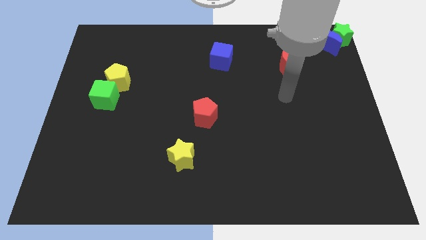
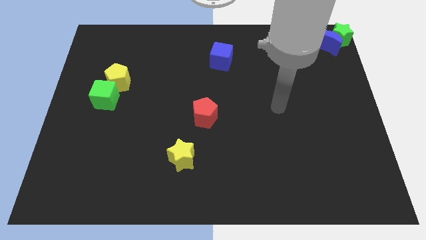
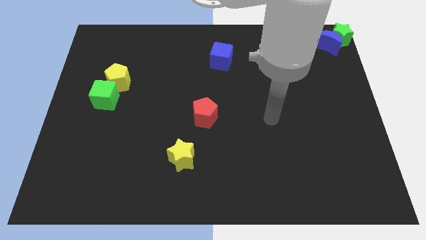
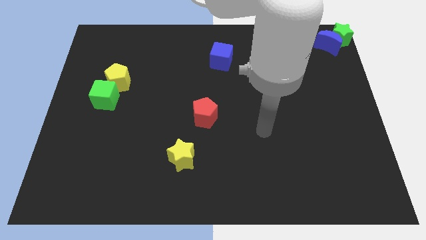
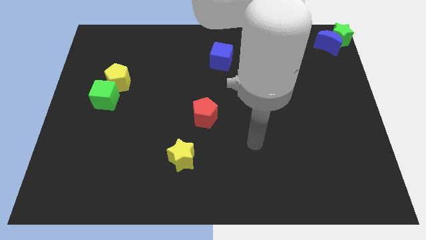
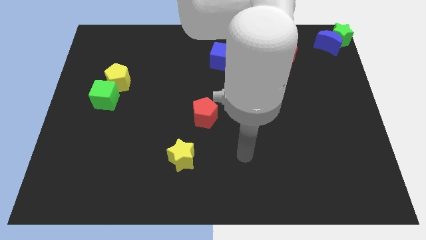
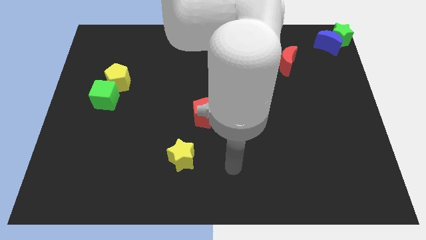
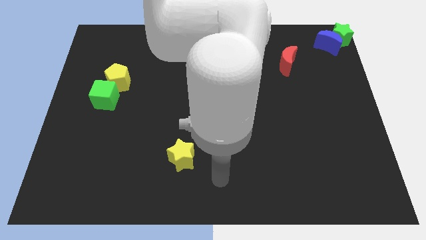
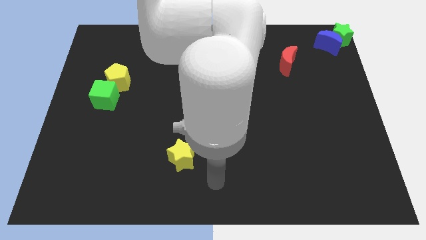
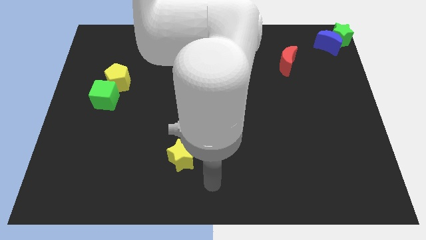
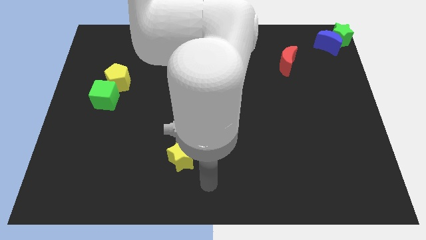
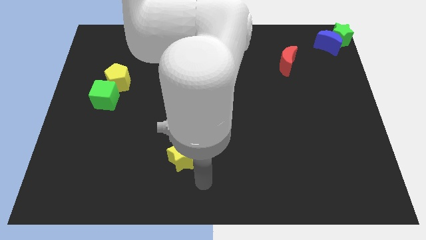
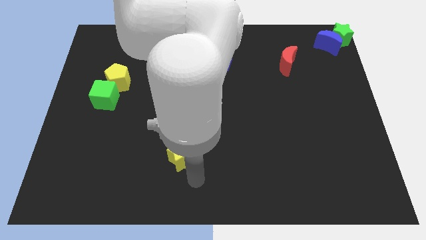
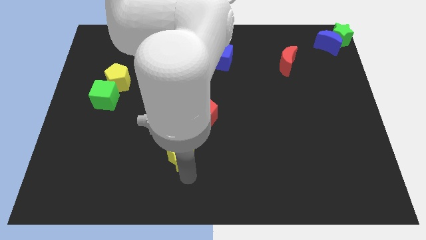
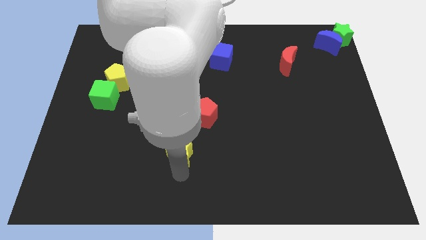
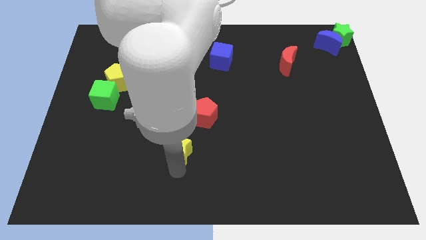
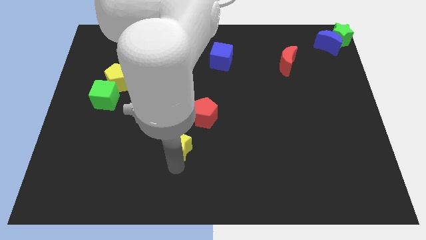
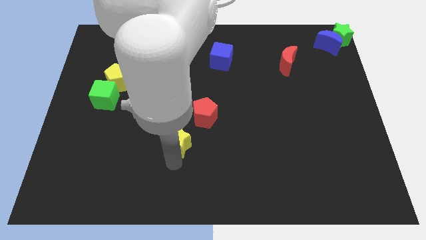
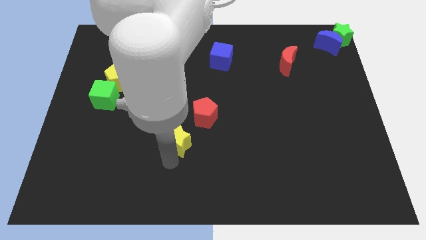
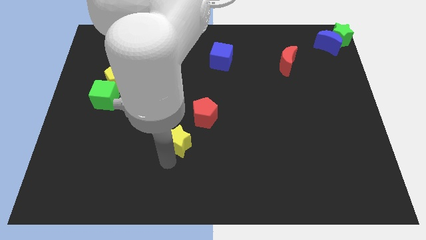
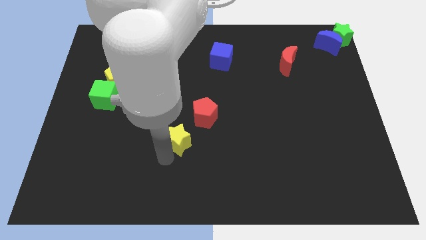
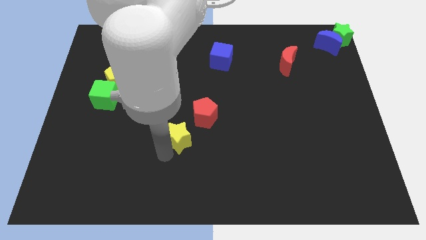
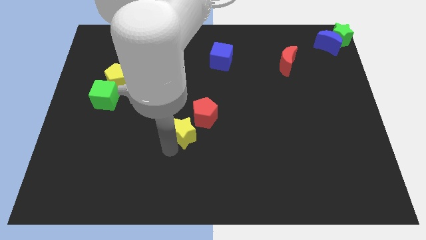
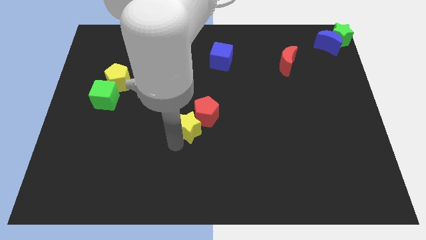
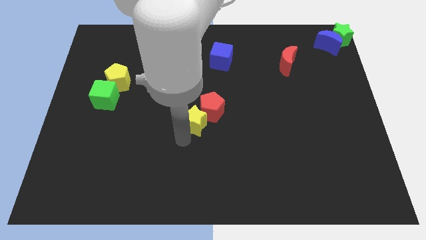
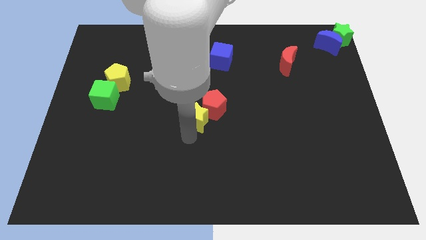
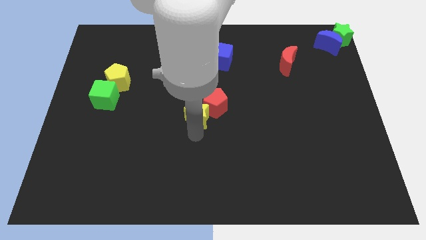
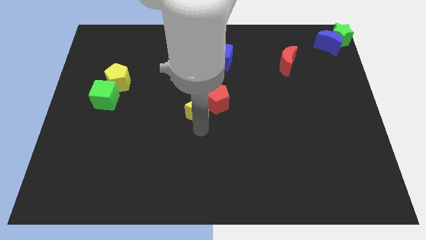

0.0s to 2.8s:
move yellow star along with the red pentagon to the centre of the board

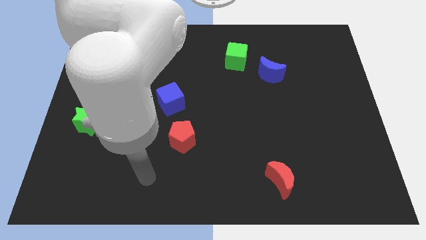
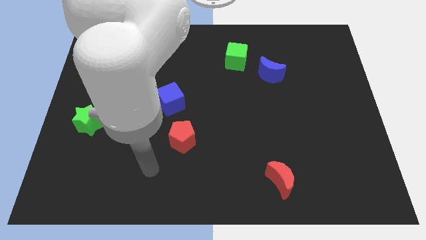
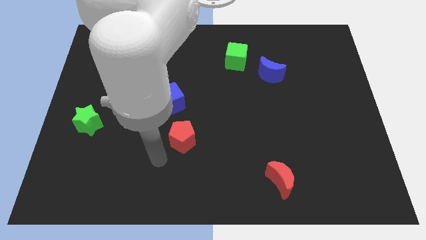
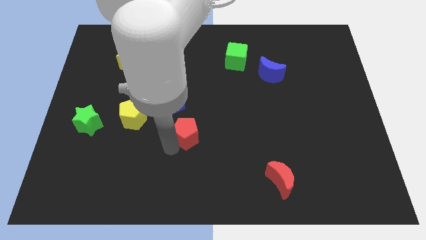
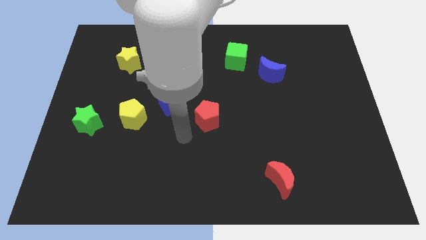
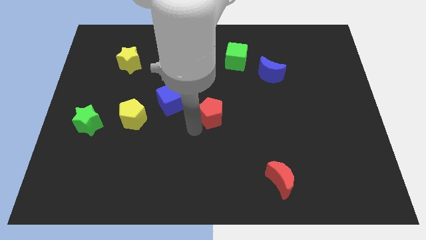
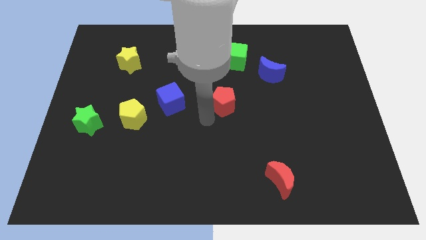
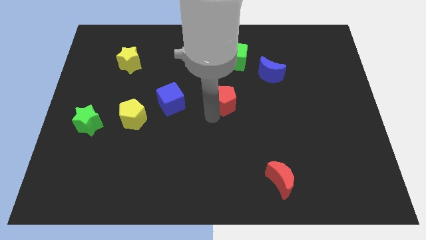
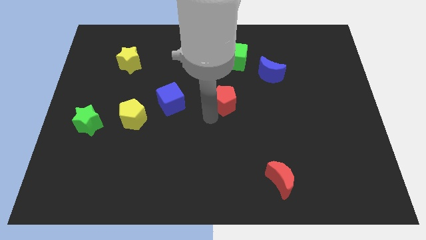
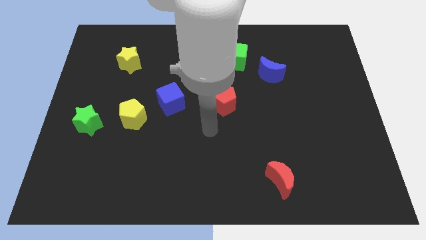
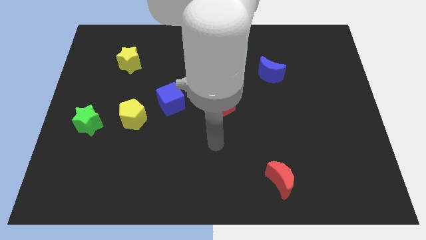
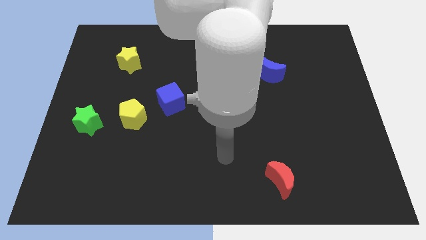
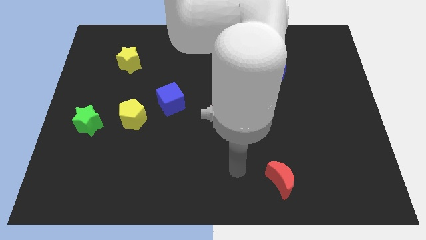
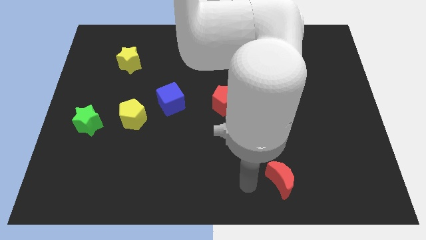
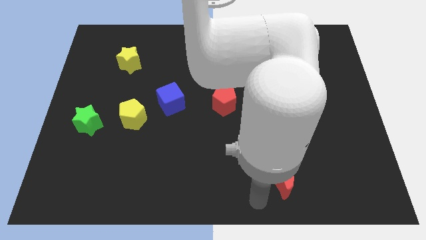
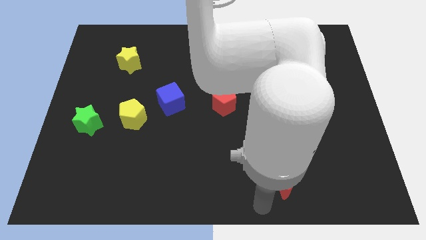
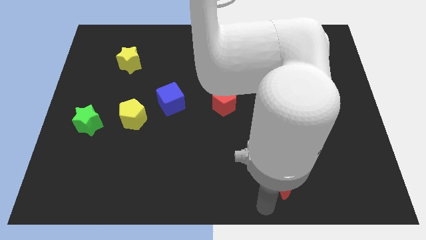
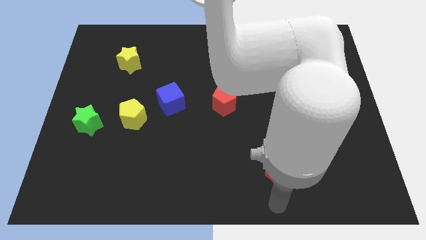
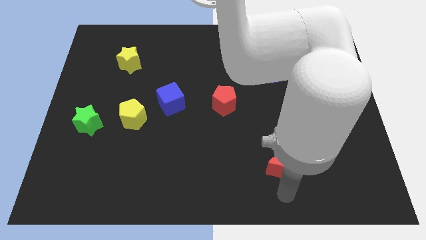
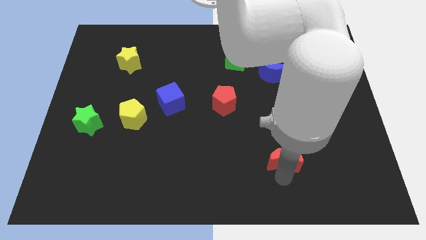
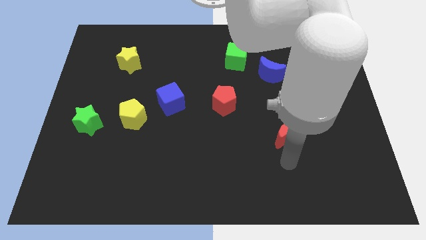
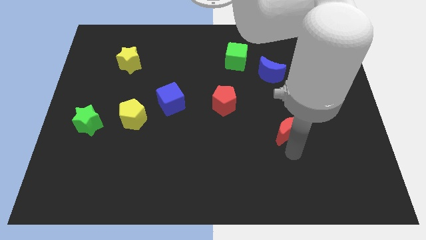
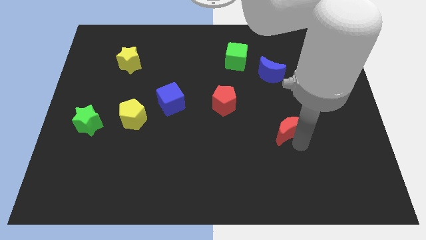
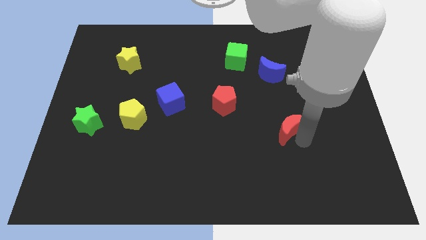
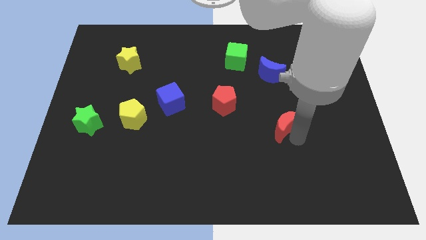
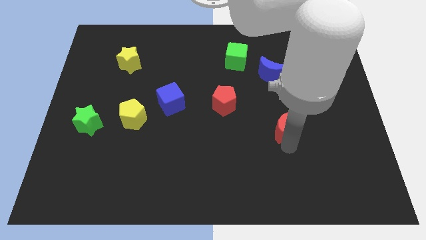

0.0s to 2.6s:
push the red pentagon to bottom of green cube

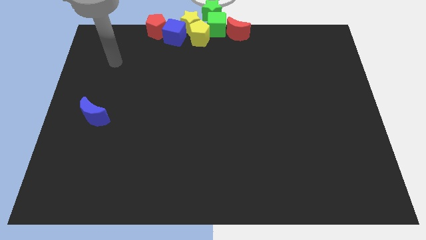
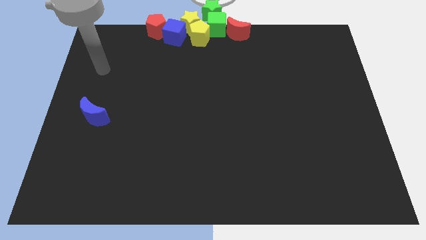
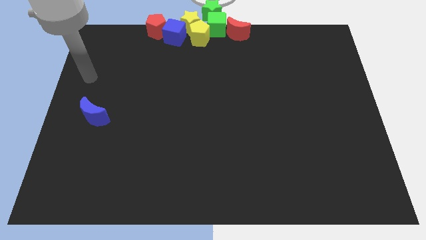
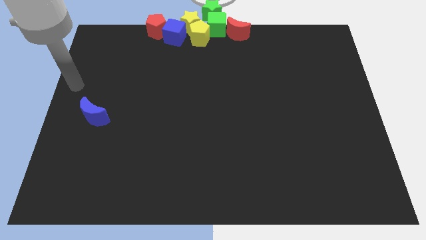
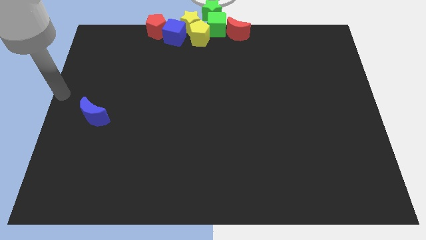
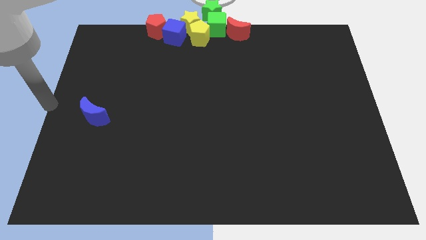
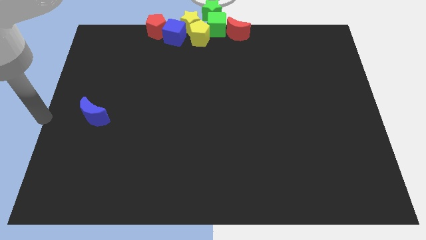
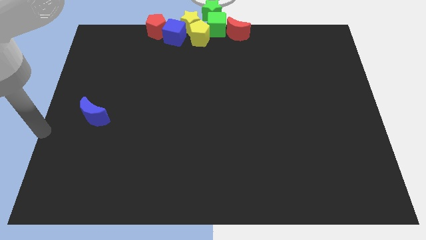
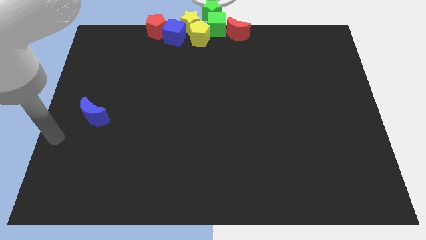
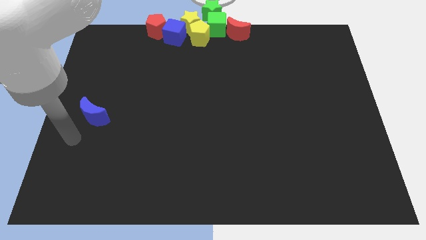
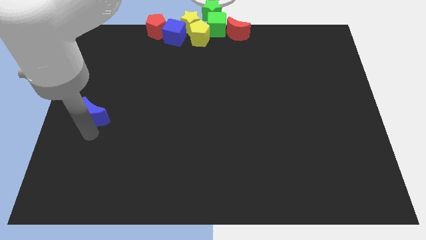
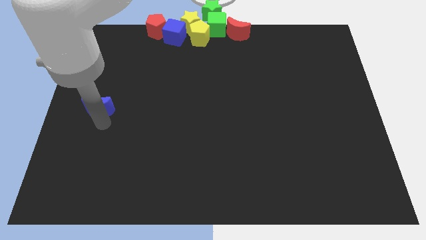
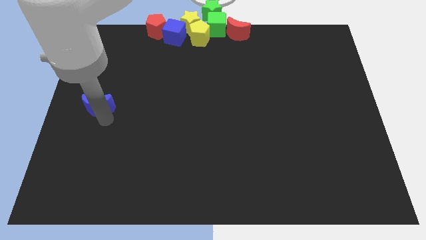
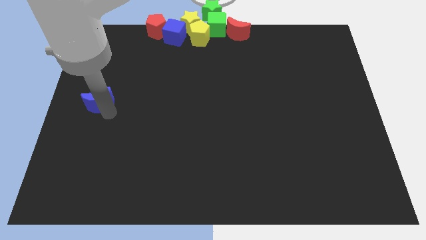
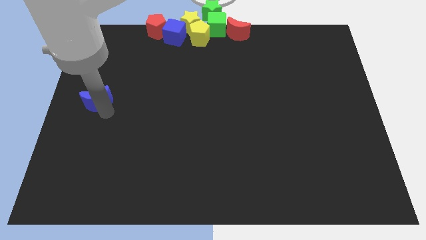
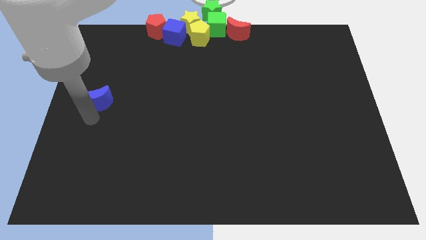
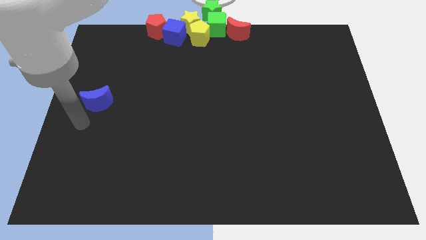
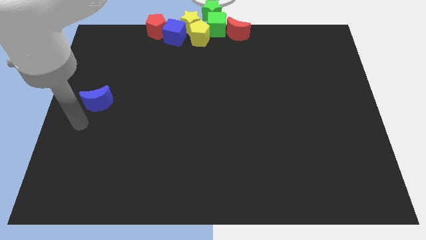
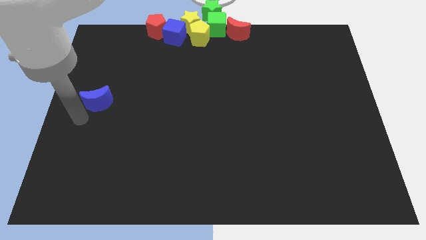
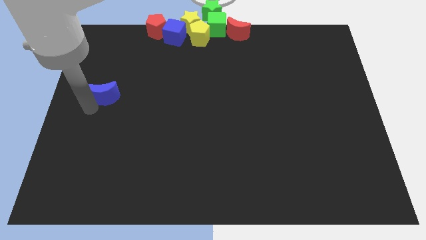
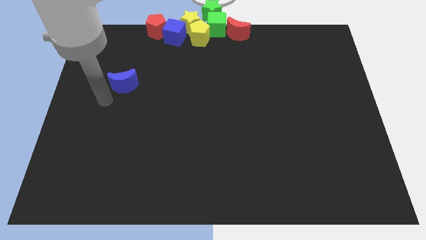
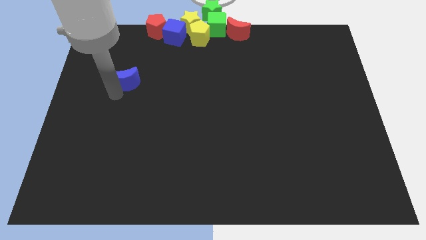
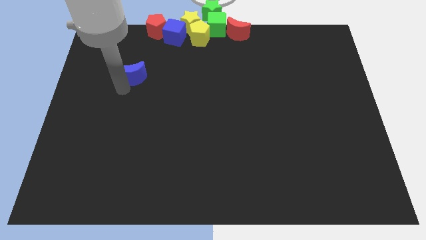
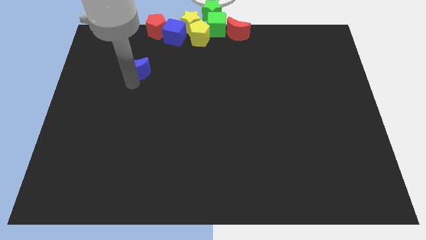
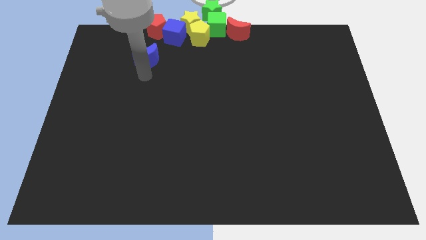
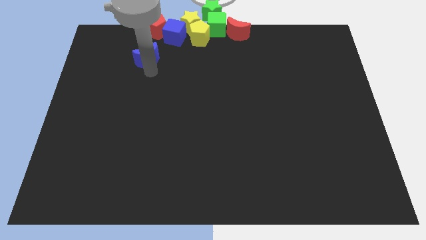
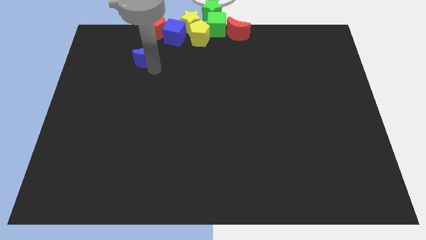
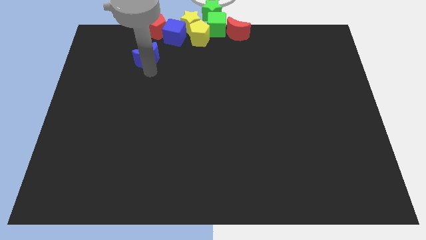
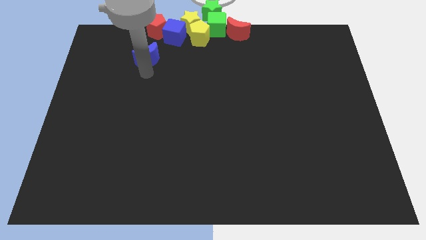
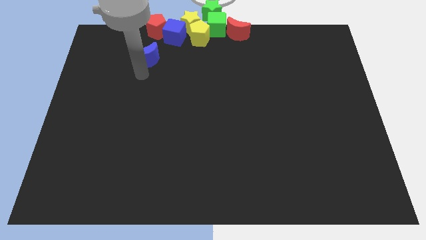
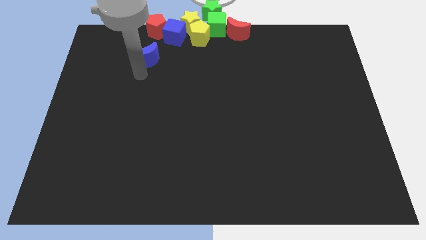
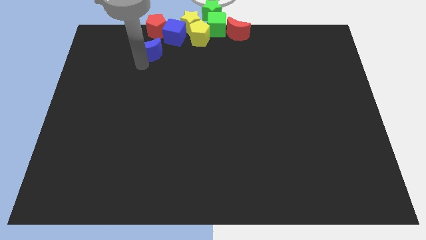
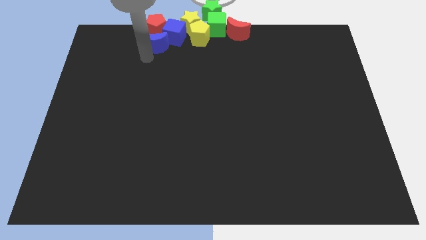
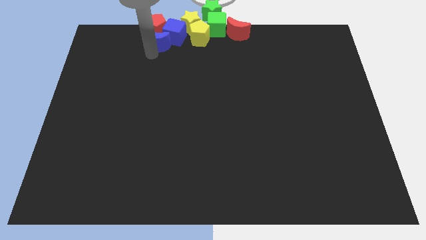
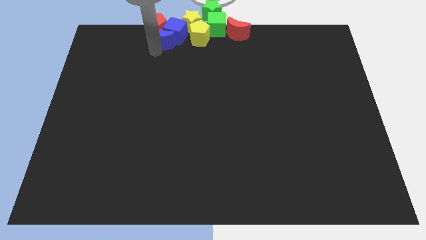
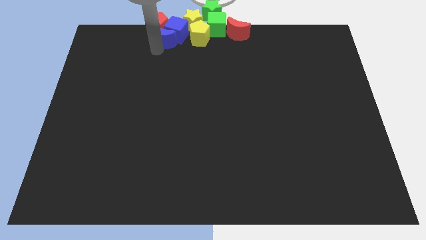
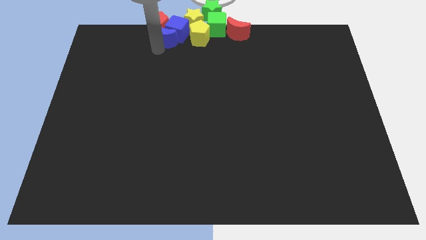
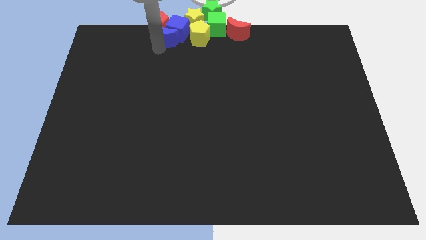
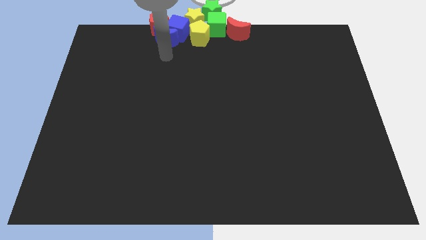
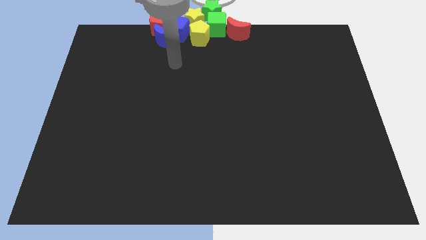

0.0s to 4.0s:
add the blue crescent to the group of blocks at the top center of the board
